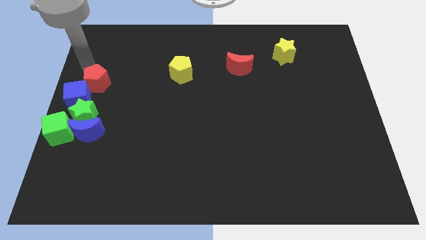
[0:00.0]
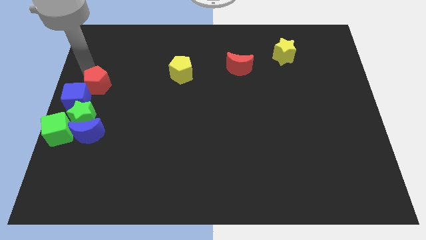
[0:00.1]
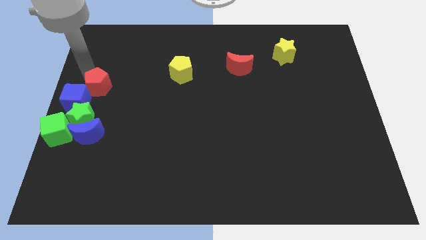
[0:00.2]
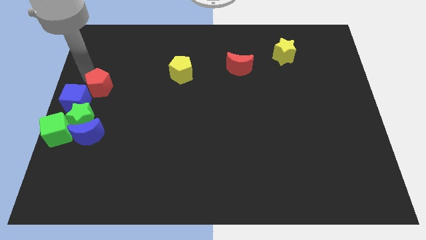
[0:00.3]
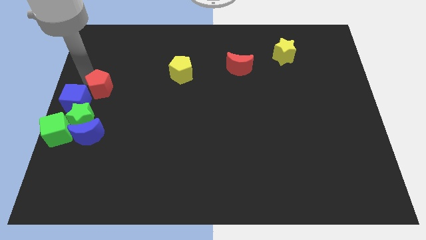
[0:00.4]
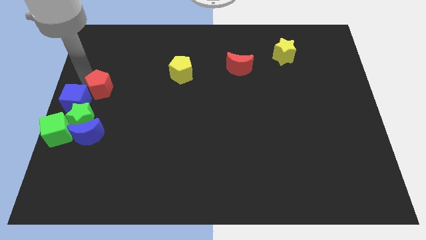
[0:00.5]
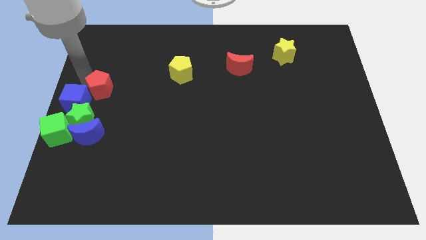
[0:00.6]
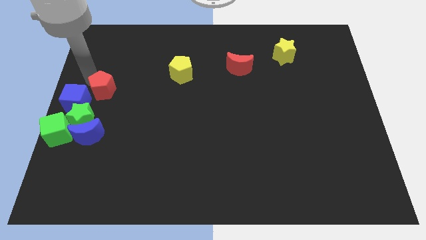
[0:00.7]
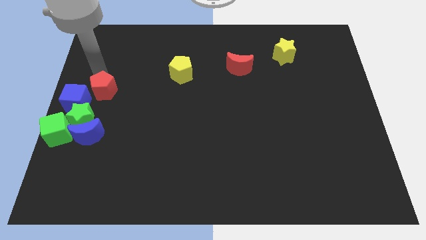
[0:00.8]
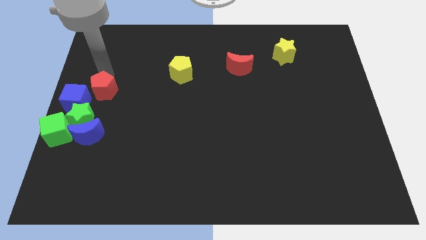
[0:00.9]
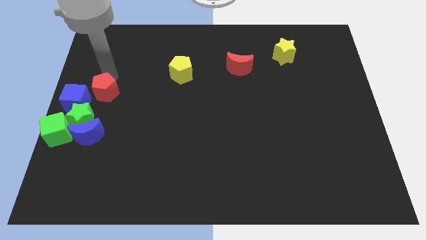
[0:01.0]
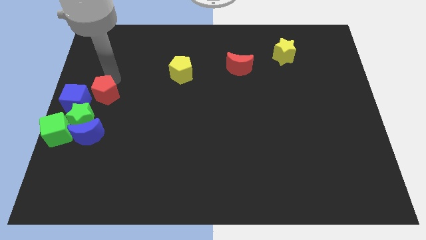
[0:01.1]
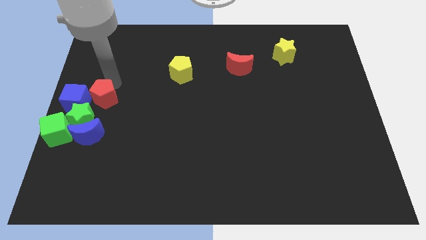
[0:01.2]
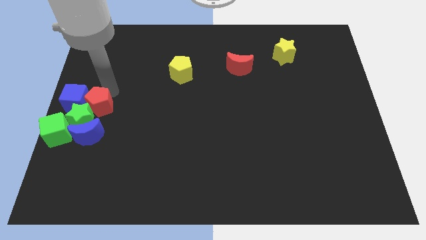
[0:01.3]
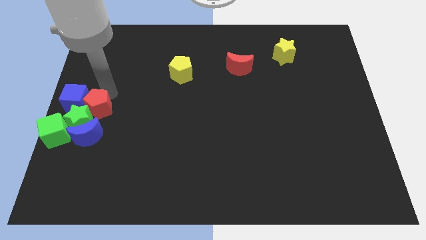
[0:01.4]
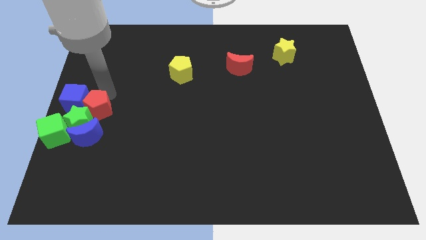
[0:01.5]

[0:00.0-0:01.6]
push the red pentagon into the group of blocks

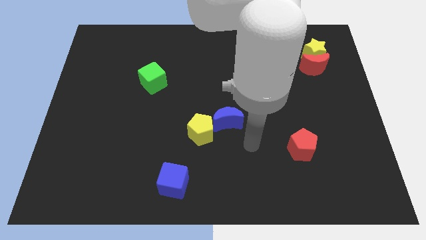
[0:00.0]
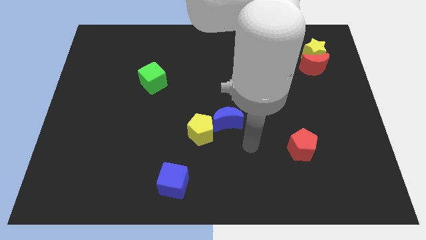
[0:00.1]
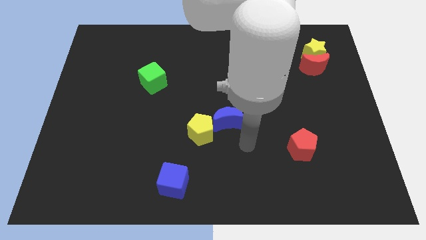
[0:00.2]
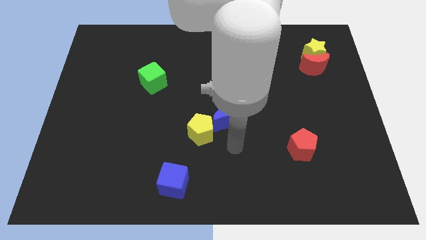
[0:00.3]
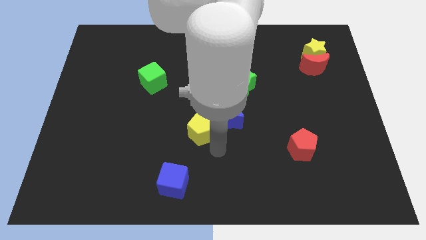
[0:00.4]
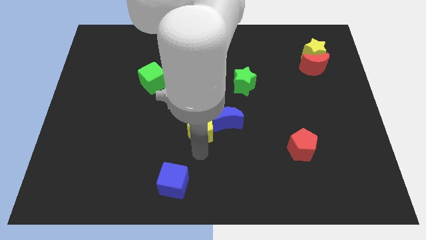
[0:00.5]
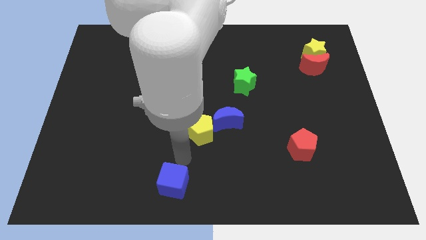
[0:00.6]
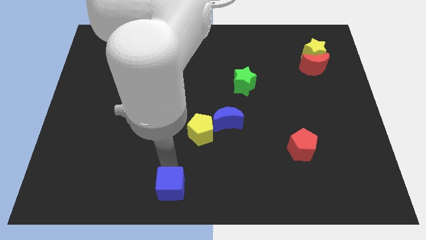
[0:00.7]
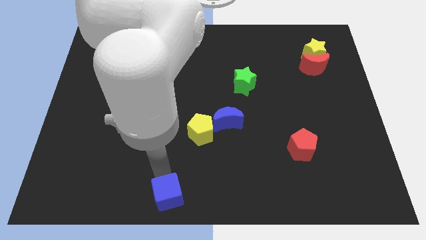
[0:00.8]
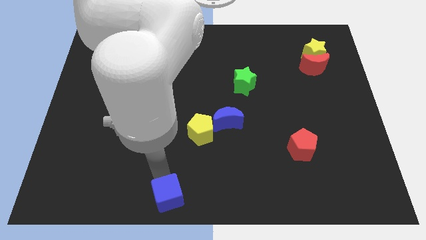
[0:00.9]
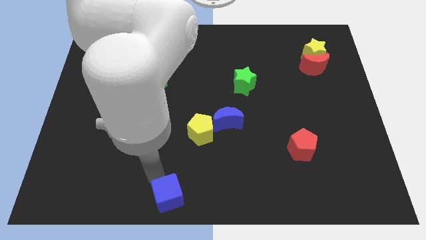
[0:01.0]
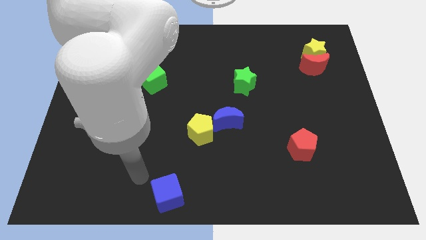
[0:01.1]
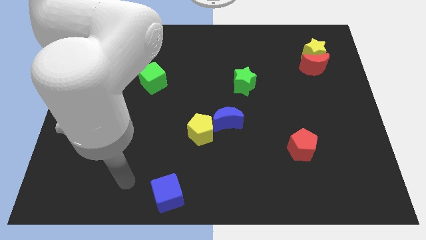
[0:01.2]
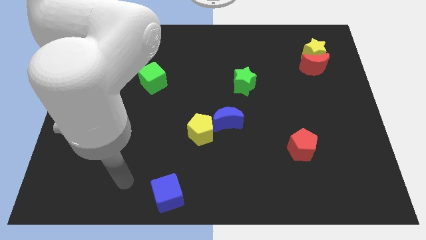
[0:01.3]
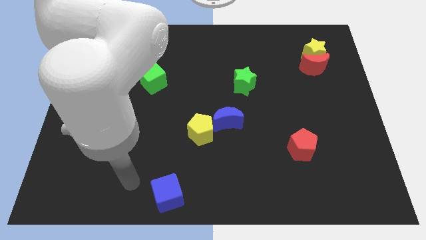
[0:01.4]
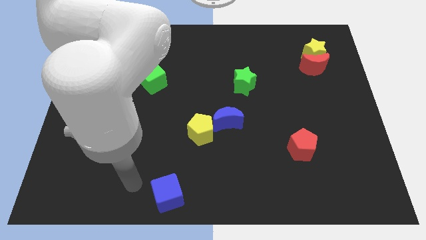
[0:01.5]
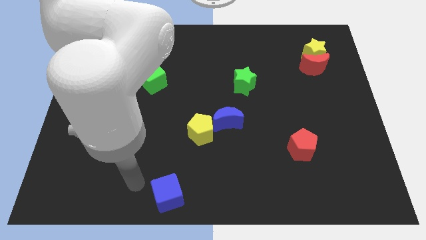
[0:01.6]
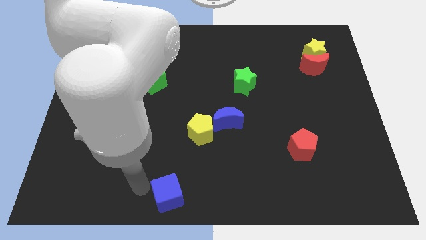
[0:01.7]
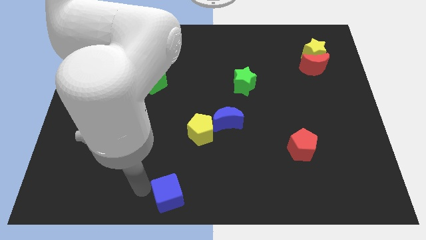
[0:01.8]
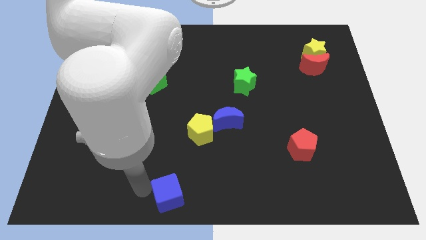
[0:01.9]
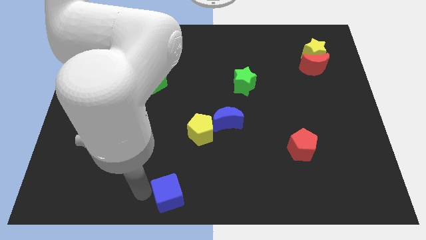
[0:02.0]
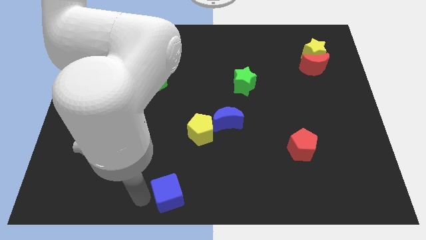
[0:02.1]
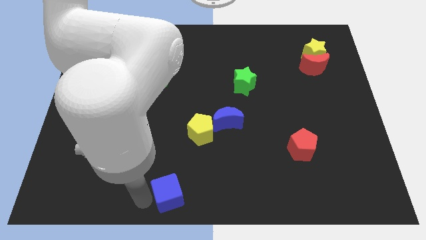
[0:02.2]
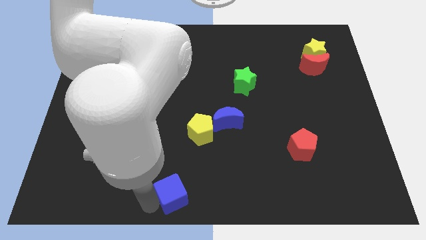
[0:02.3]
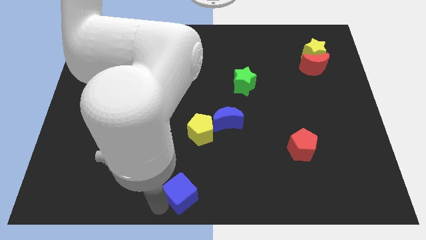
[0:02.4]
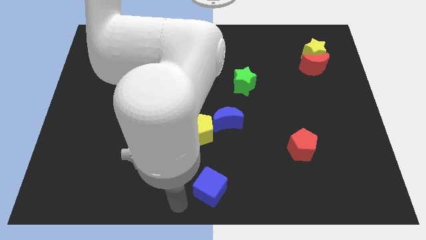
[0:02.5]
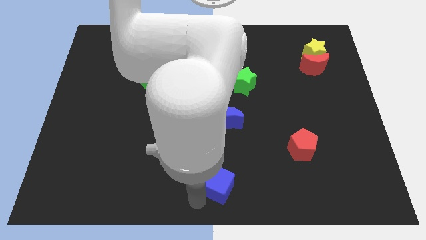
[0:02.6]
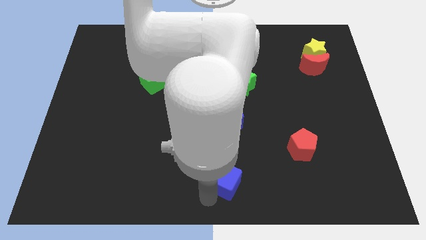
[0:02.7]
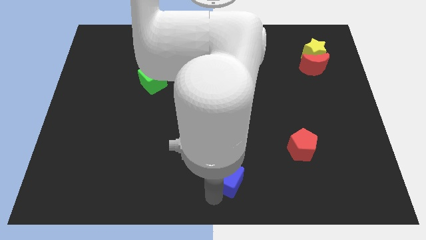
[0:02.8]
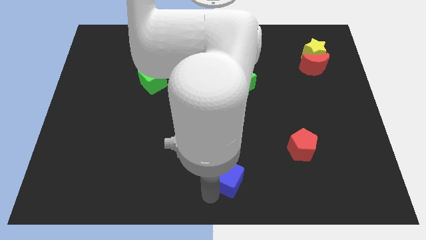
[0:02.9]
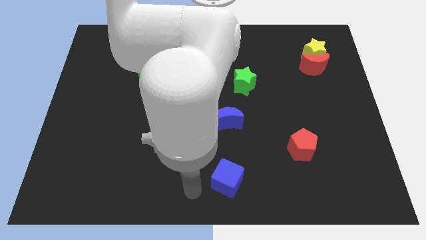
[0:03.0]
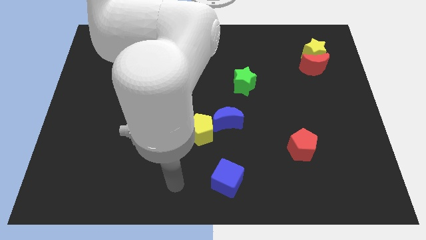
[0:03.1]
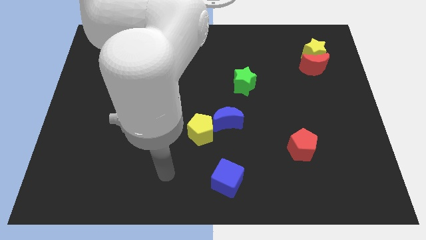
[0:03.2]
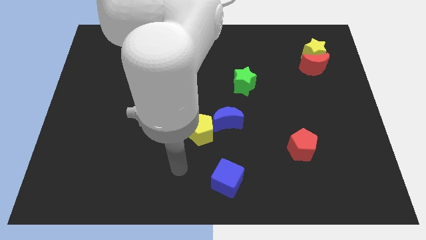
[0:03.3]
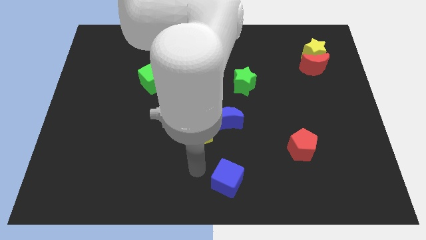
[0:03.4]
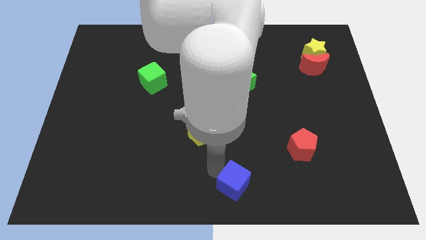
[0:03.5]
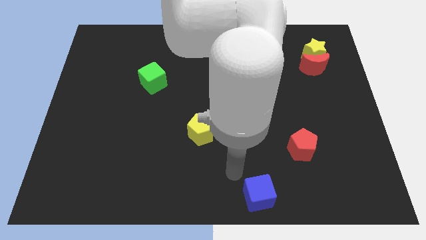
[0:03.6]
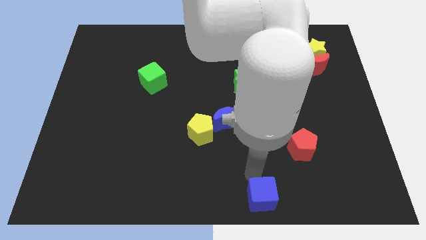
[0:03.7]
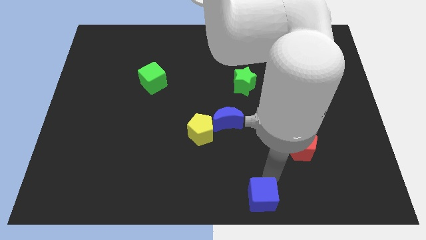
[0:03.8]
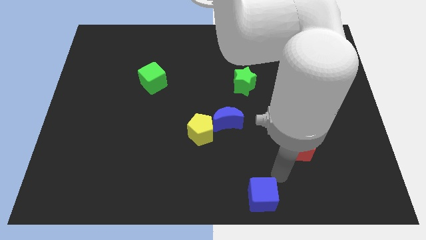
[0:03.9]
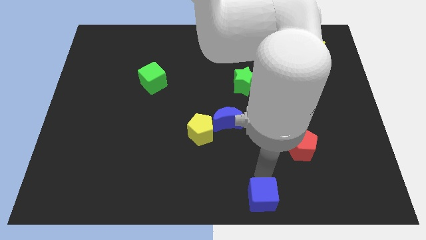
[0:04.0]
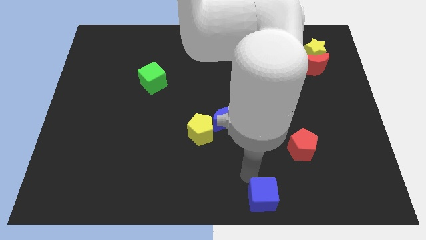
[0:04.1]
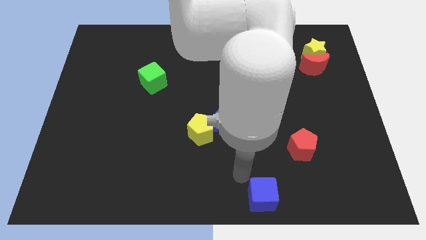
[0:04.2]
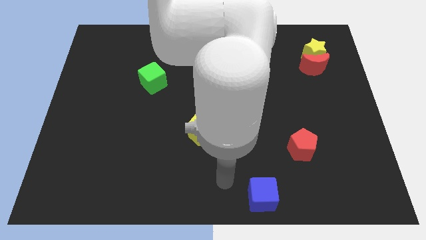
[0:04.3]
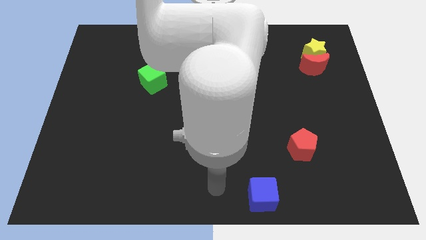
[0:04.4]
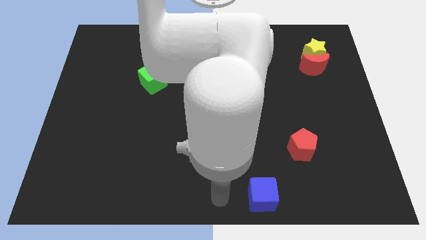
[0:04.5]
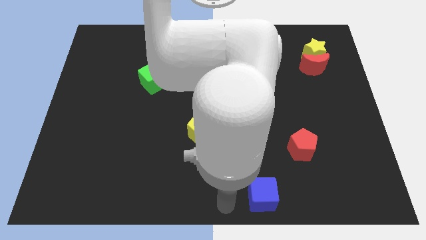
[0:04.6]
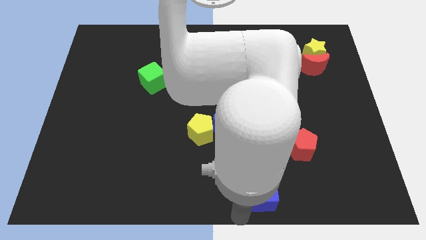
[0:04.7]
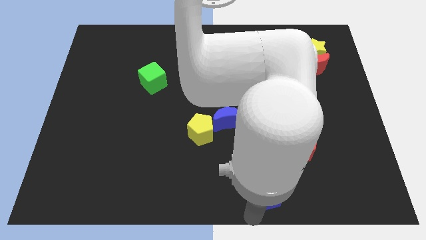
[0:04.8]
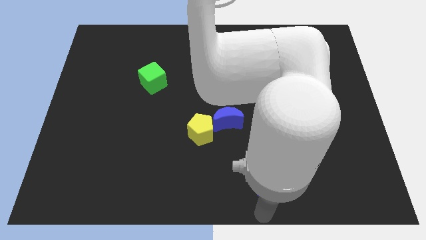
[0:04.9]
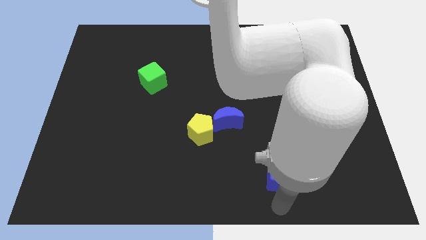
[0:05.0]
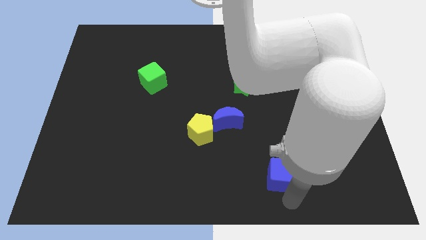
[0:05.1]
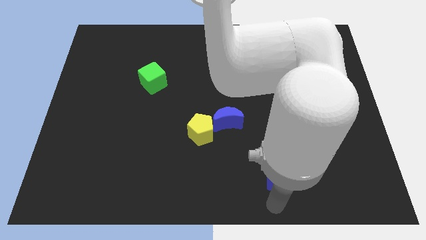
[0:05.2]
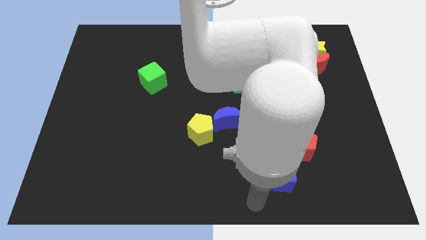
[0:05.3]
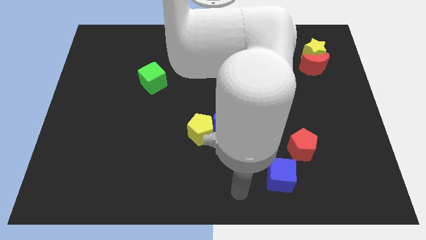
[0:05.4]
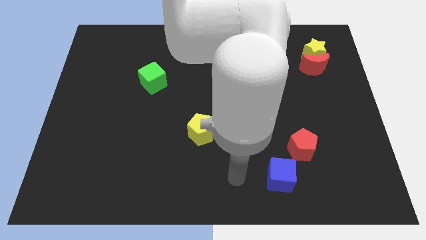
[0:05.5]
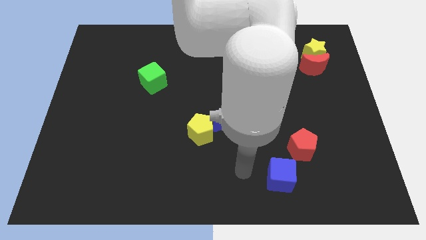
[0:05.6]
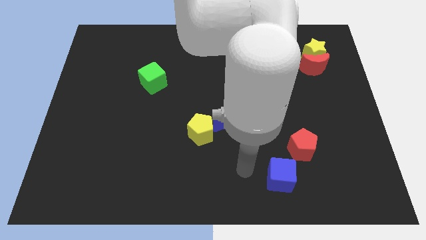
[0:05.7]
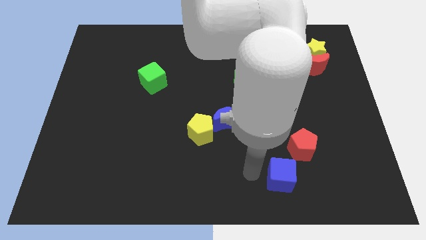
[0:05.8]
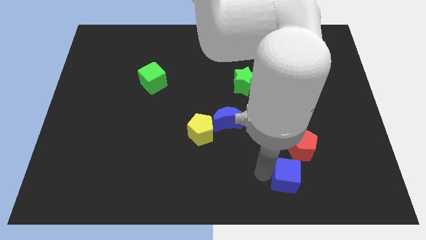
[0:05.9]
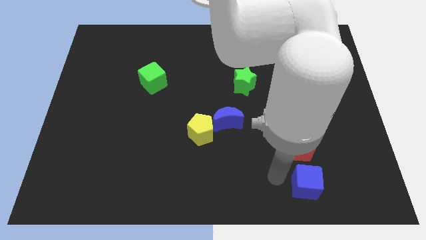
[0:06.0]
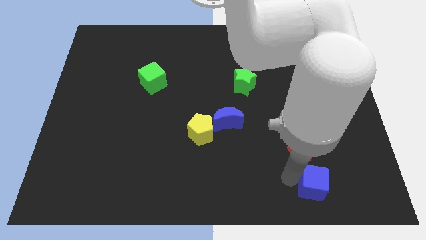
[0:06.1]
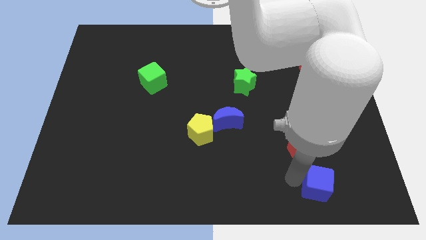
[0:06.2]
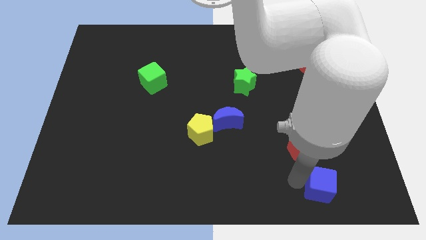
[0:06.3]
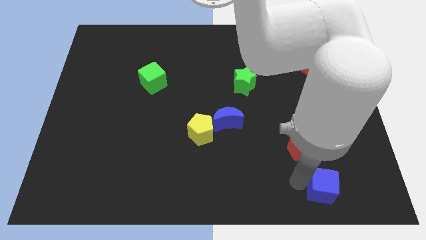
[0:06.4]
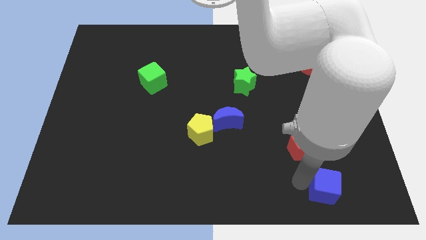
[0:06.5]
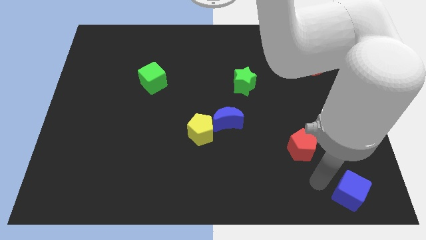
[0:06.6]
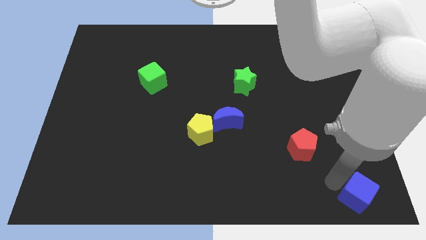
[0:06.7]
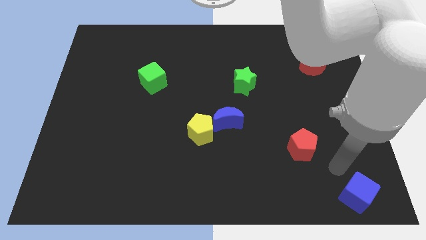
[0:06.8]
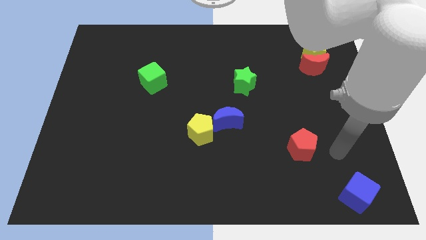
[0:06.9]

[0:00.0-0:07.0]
push the blue cube to the bottom right of the board

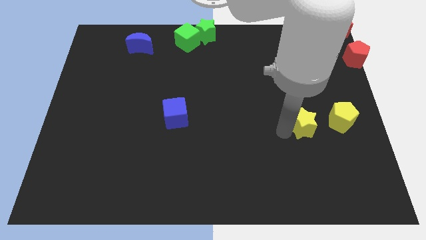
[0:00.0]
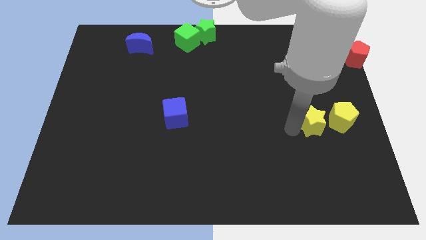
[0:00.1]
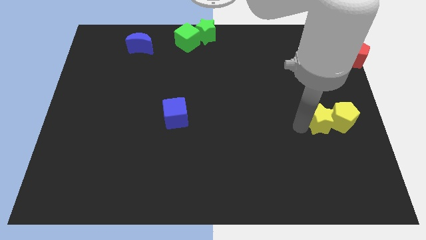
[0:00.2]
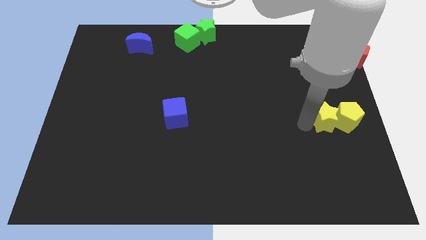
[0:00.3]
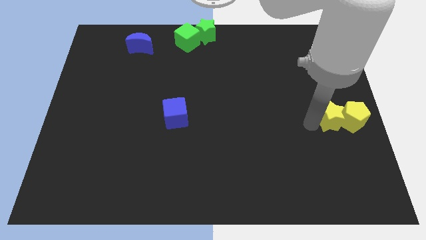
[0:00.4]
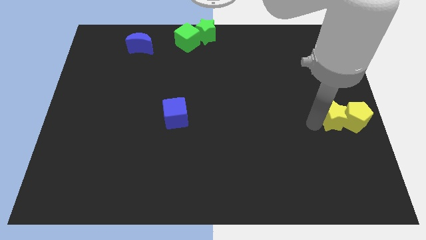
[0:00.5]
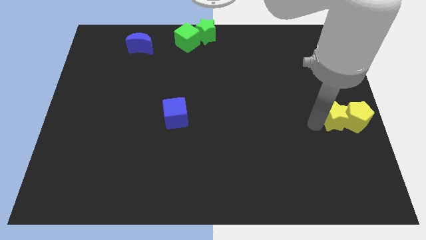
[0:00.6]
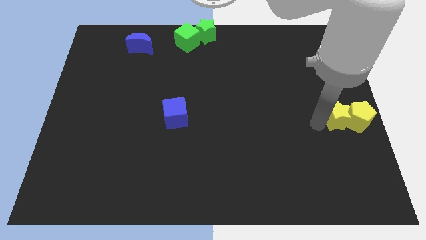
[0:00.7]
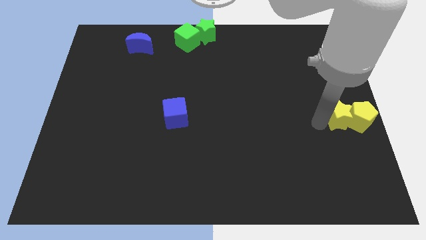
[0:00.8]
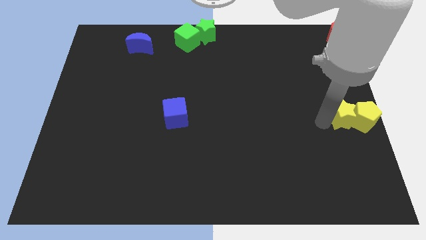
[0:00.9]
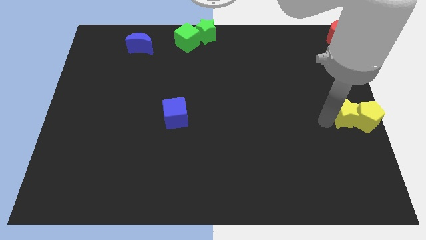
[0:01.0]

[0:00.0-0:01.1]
push the yellow star into the yellow pentagon
